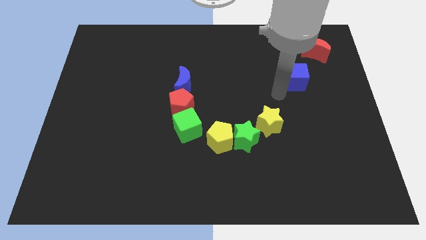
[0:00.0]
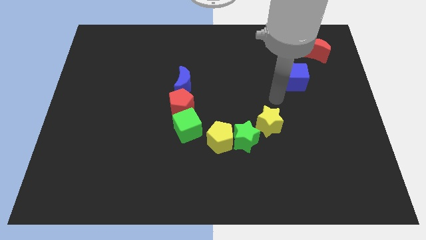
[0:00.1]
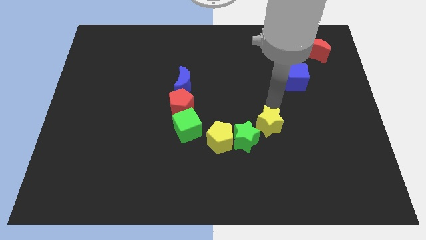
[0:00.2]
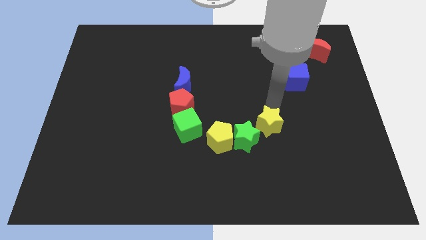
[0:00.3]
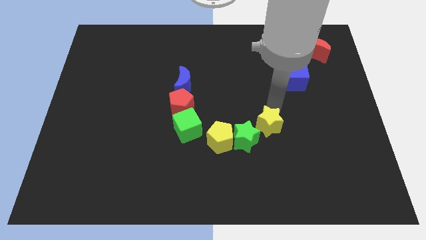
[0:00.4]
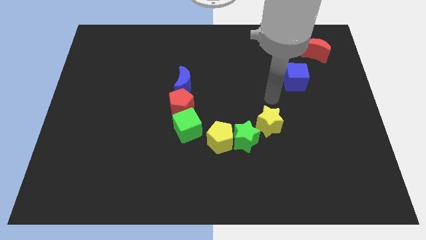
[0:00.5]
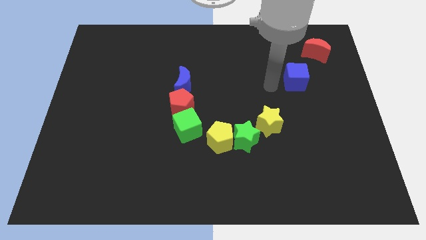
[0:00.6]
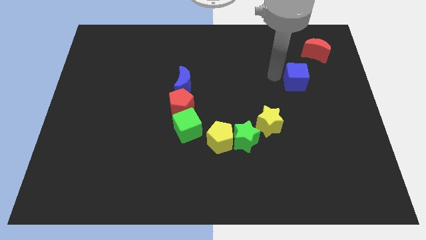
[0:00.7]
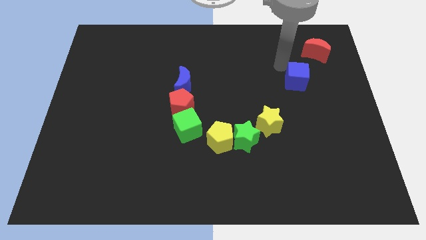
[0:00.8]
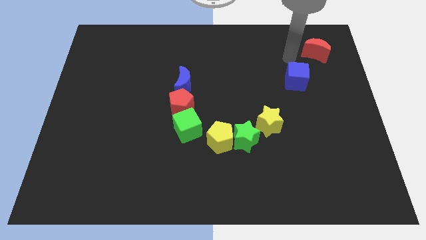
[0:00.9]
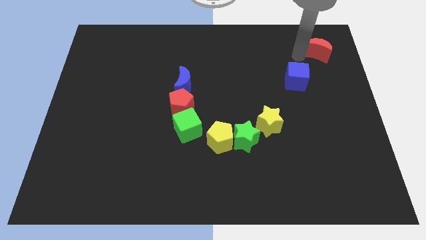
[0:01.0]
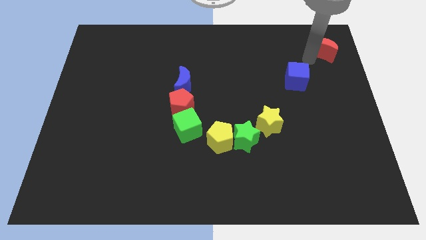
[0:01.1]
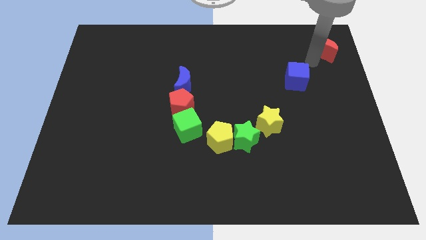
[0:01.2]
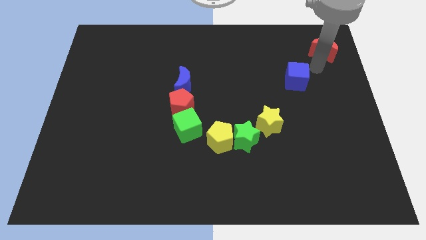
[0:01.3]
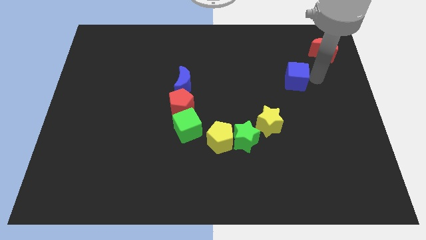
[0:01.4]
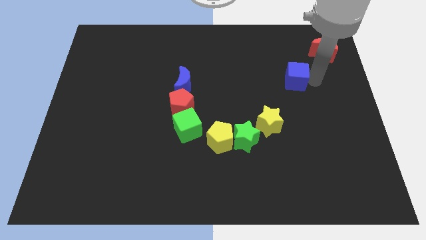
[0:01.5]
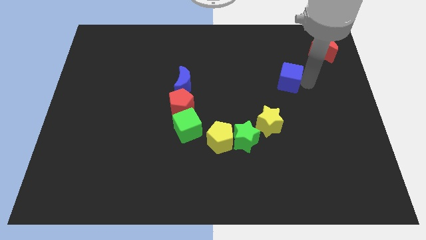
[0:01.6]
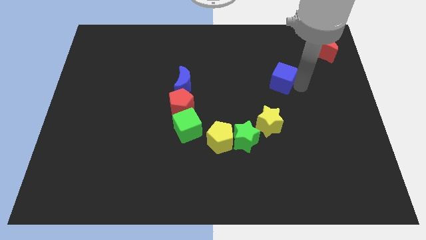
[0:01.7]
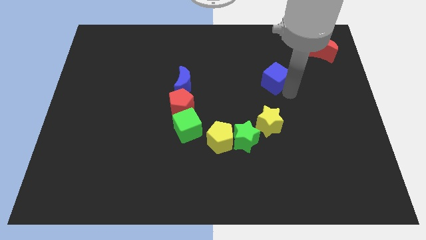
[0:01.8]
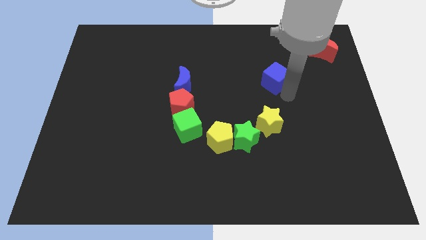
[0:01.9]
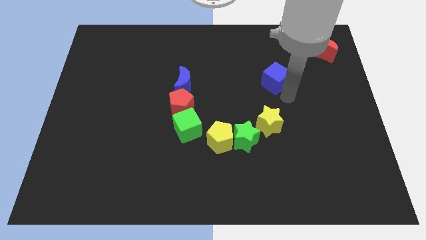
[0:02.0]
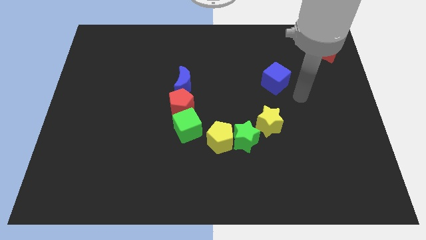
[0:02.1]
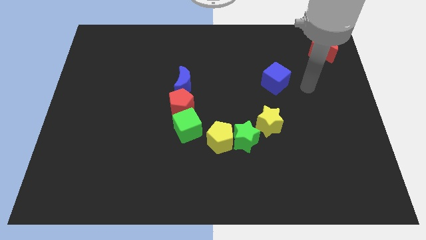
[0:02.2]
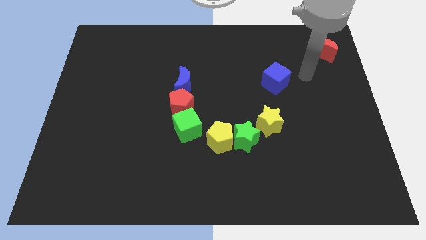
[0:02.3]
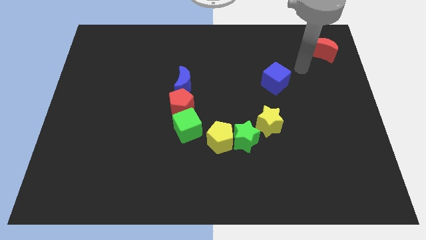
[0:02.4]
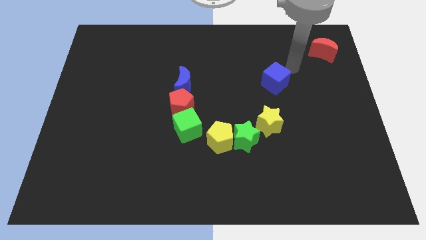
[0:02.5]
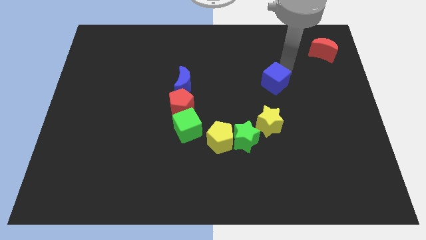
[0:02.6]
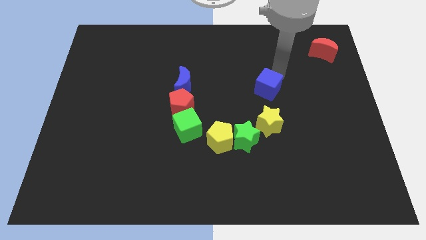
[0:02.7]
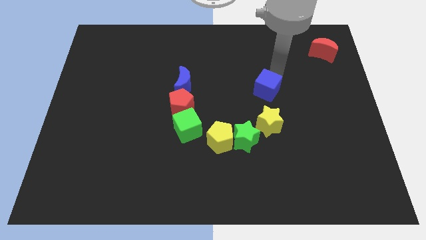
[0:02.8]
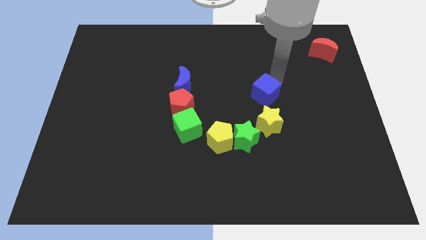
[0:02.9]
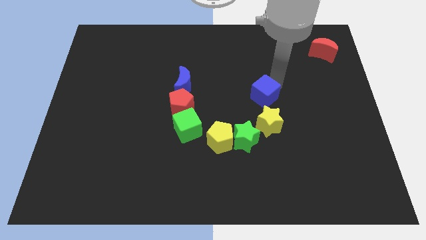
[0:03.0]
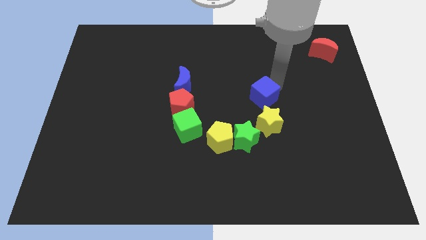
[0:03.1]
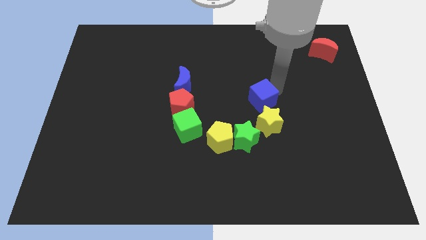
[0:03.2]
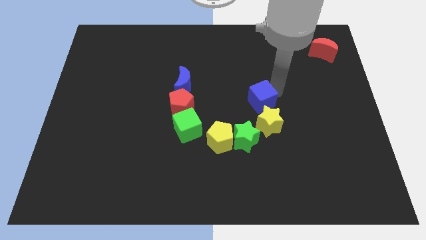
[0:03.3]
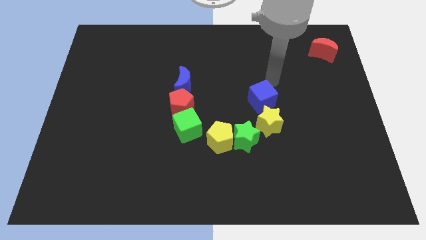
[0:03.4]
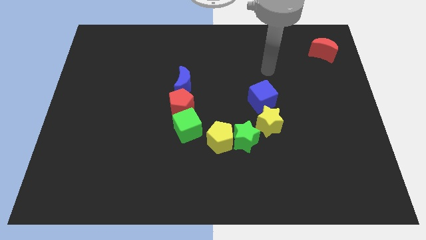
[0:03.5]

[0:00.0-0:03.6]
push blue cube above yellow star

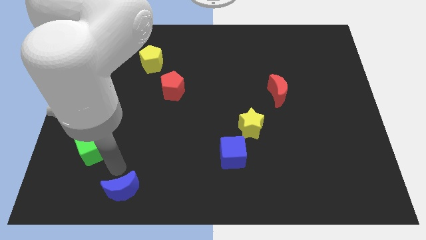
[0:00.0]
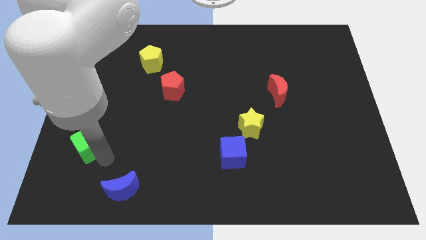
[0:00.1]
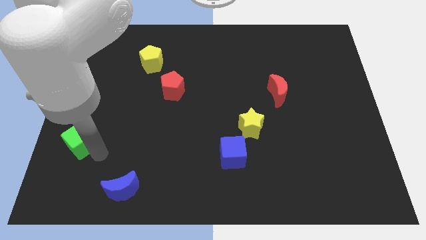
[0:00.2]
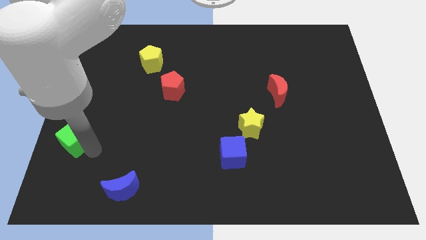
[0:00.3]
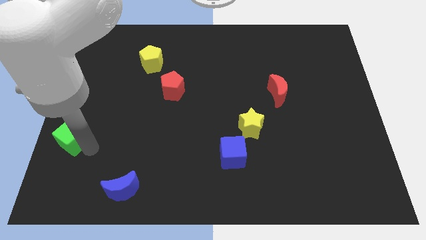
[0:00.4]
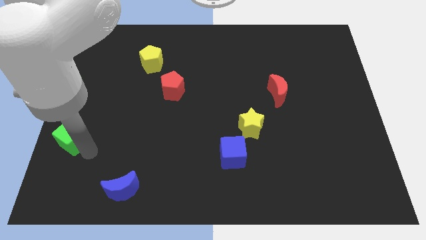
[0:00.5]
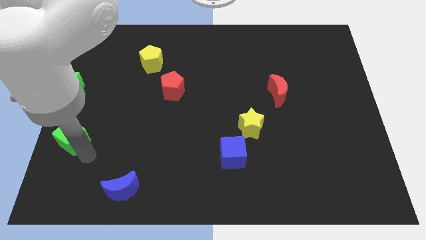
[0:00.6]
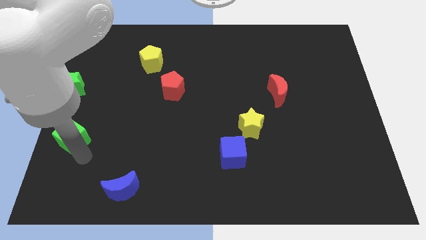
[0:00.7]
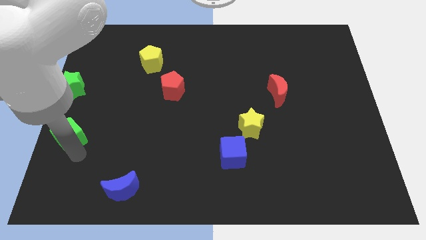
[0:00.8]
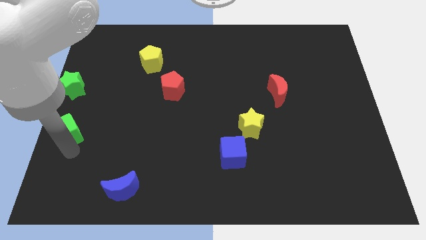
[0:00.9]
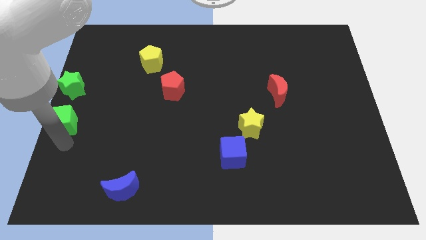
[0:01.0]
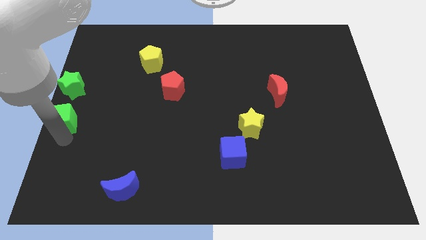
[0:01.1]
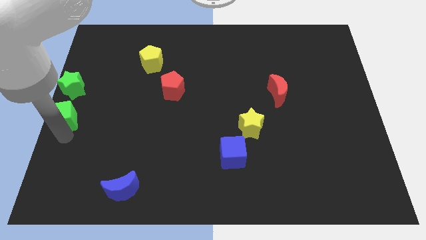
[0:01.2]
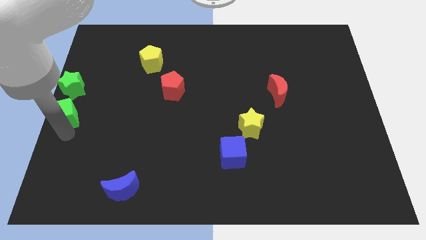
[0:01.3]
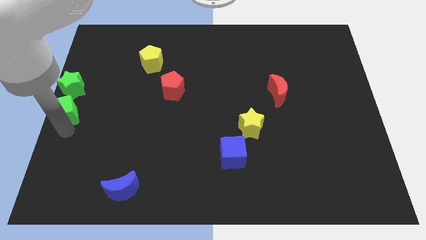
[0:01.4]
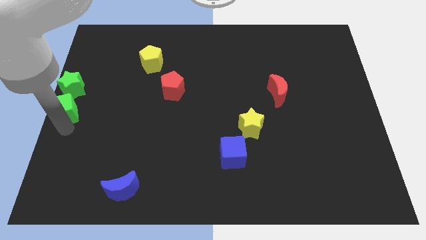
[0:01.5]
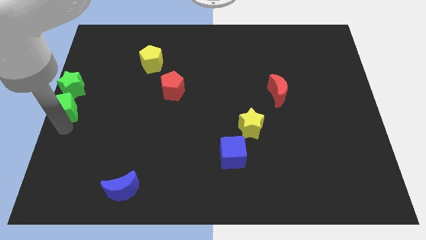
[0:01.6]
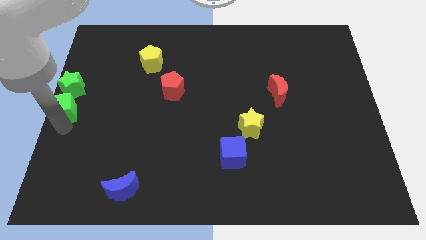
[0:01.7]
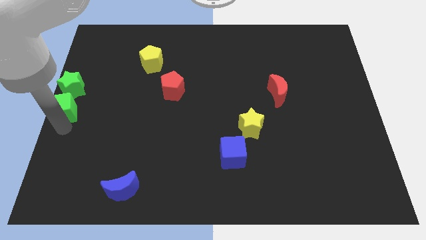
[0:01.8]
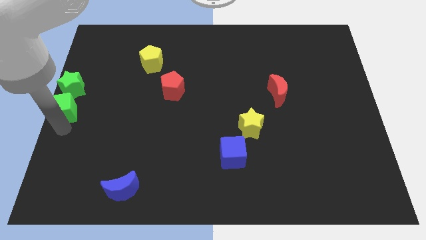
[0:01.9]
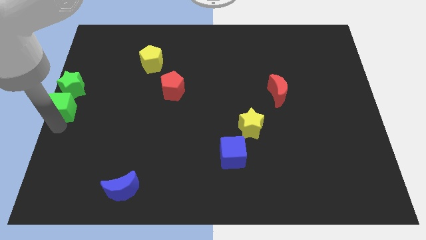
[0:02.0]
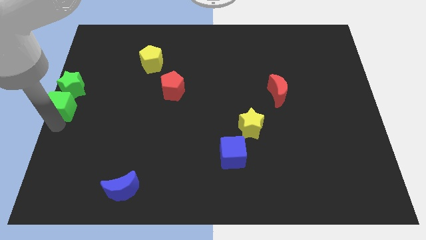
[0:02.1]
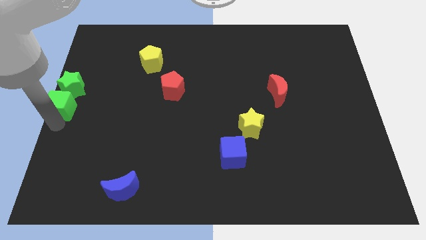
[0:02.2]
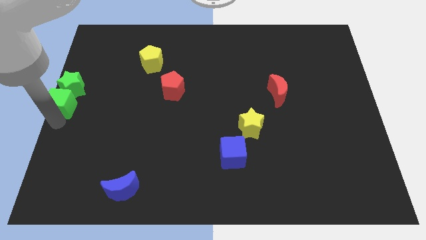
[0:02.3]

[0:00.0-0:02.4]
move the green cube into bottom of the green star

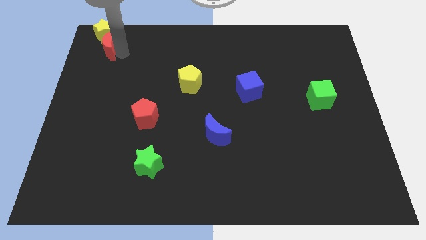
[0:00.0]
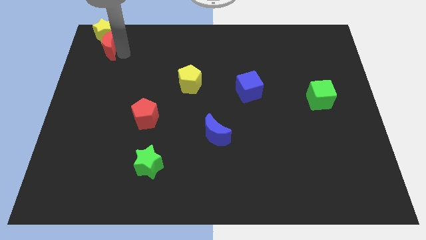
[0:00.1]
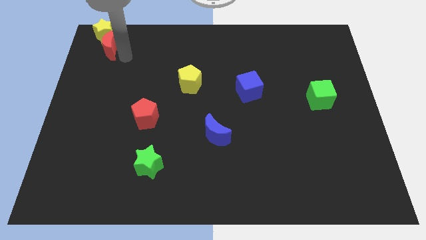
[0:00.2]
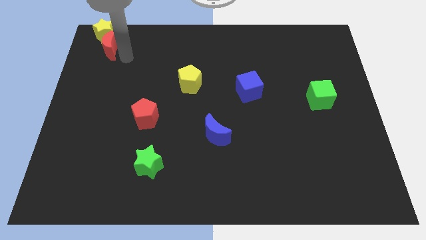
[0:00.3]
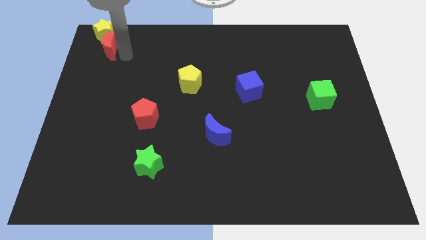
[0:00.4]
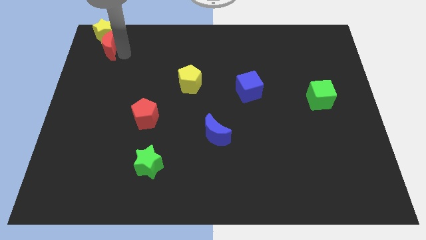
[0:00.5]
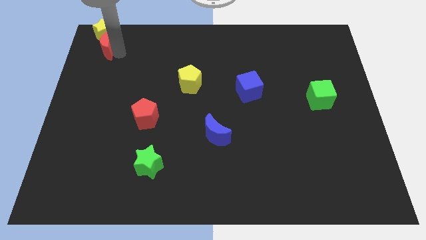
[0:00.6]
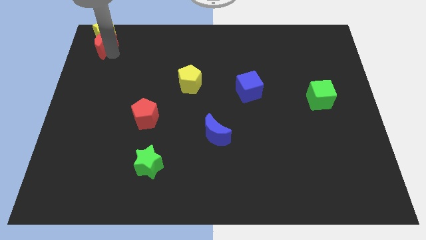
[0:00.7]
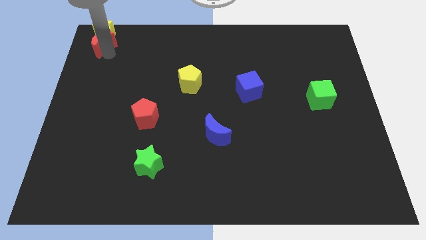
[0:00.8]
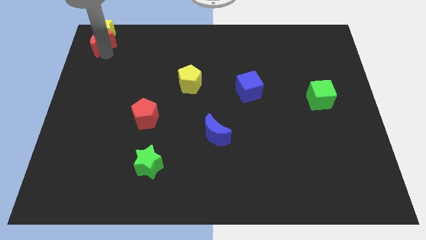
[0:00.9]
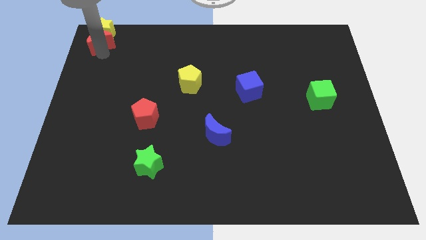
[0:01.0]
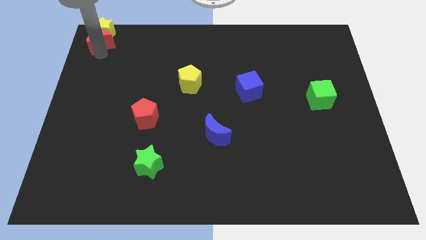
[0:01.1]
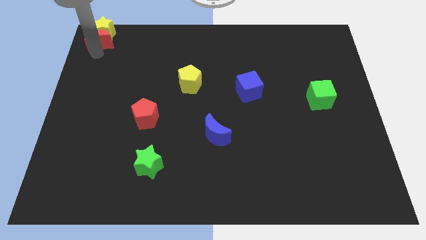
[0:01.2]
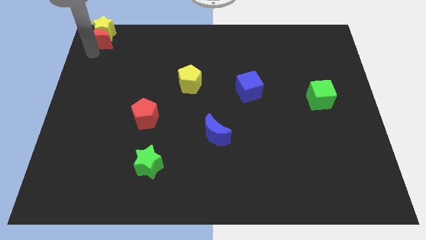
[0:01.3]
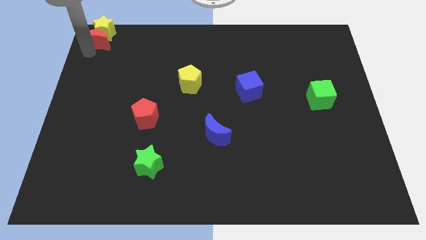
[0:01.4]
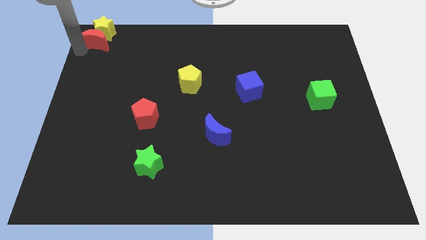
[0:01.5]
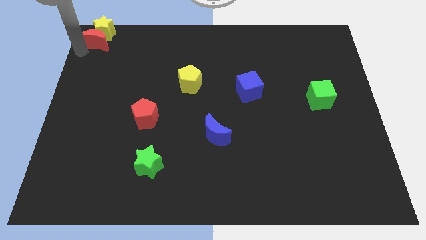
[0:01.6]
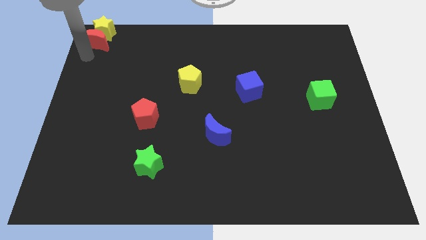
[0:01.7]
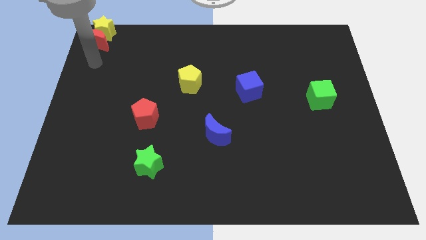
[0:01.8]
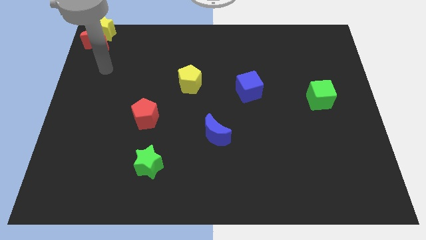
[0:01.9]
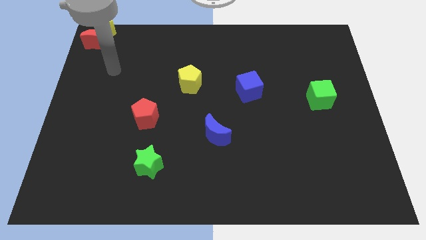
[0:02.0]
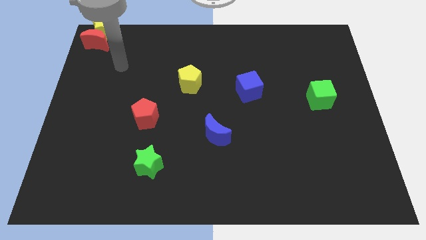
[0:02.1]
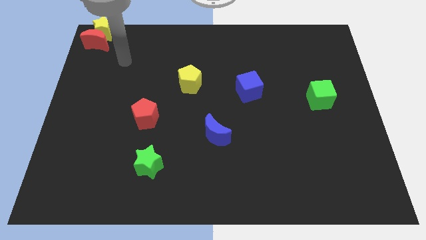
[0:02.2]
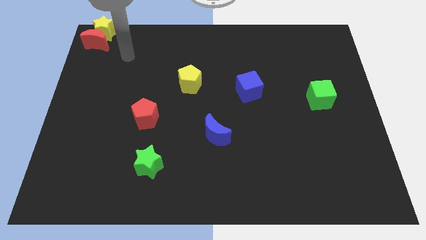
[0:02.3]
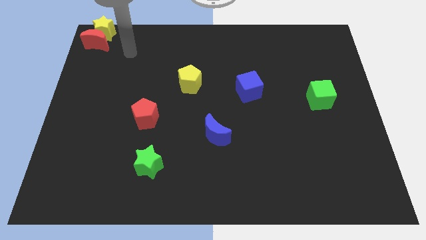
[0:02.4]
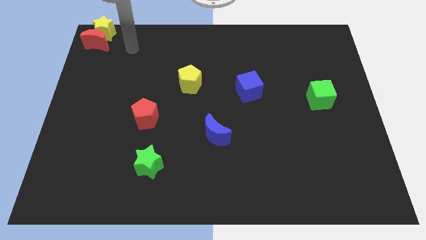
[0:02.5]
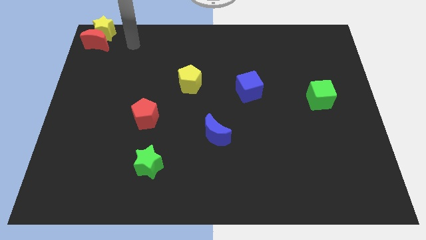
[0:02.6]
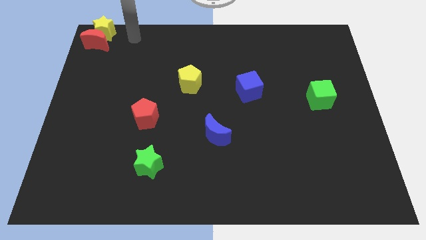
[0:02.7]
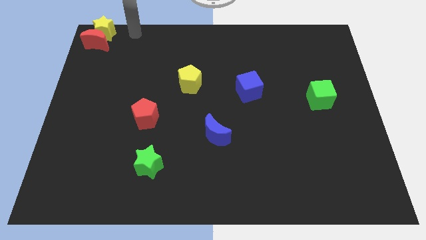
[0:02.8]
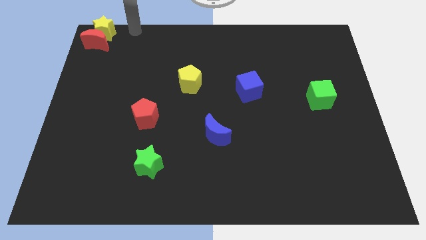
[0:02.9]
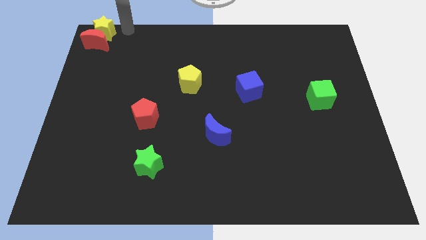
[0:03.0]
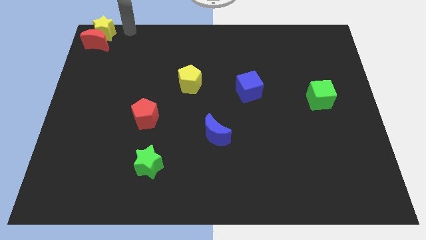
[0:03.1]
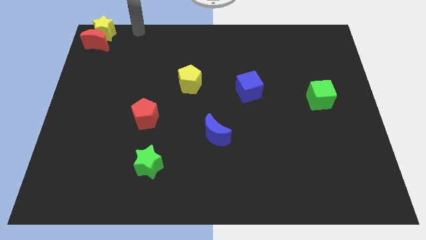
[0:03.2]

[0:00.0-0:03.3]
place the red moon and yellow star at the top left side of the board
